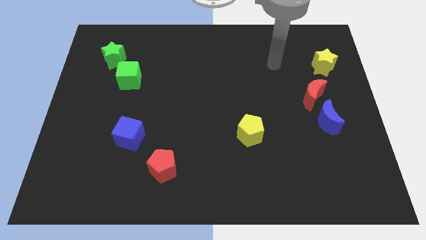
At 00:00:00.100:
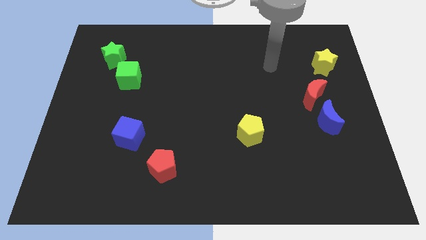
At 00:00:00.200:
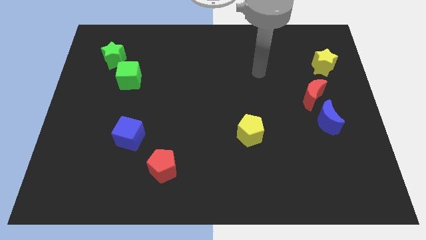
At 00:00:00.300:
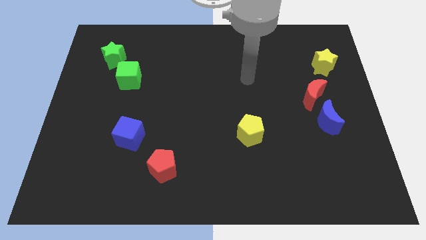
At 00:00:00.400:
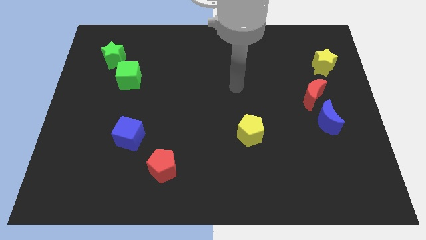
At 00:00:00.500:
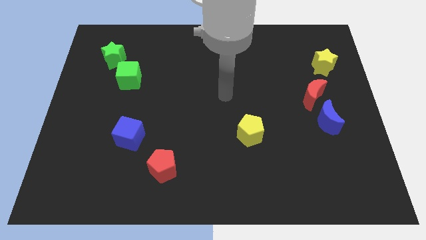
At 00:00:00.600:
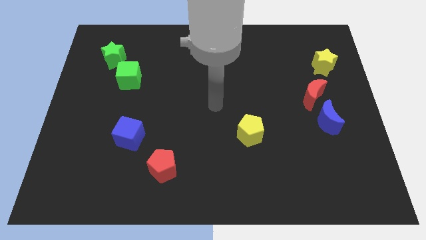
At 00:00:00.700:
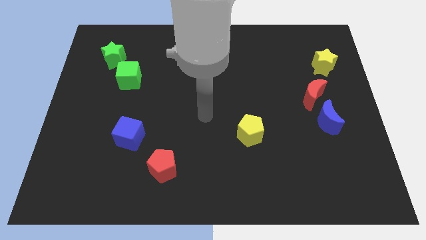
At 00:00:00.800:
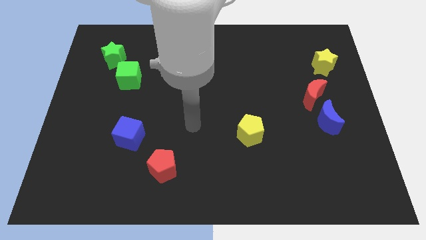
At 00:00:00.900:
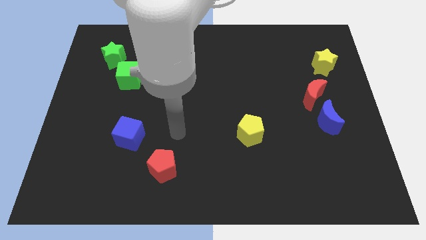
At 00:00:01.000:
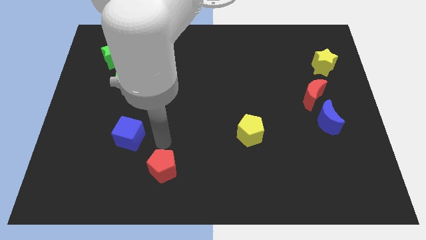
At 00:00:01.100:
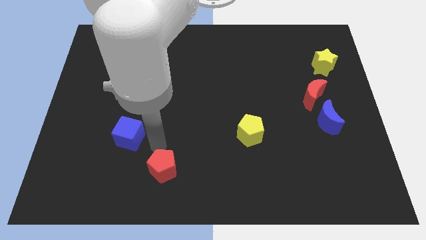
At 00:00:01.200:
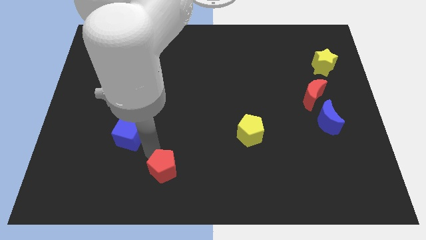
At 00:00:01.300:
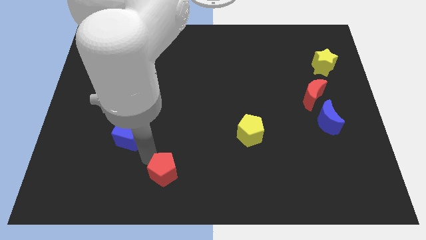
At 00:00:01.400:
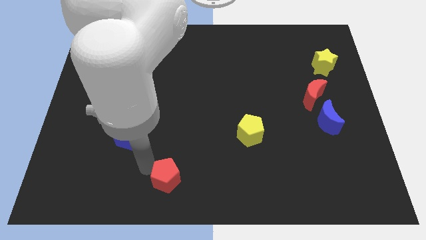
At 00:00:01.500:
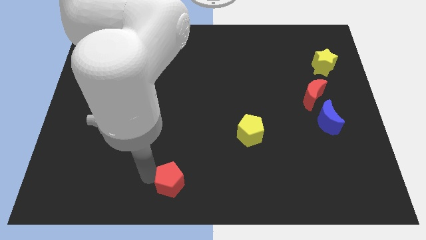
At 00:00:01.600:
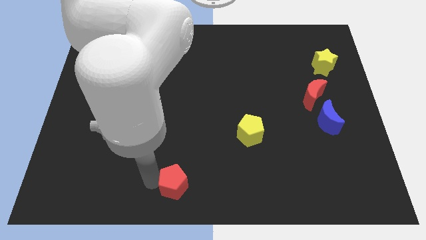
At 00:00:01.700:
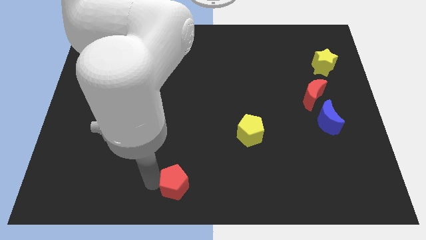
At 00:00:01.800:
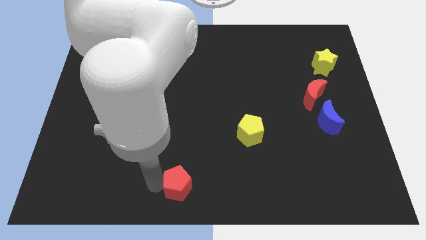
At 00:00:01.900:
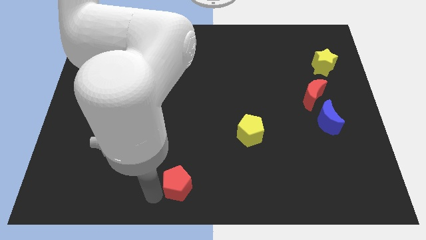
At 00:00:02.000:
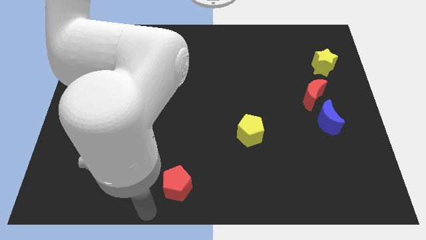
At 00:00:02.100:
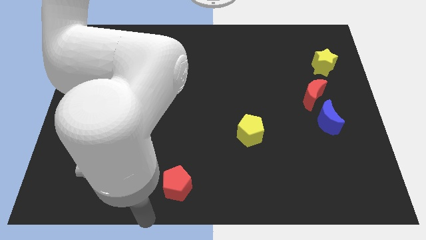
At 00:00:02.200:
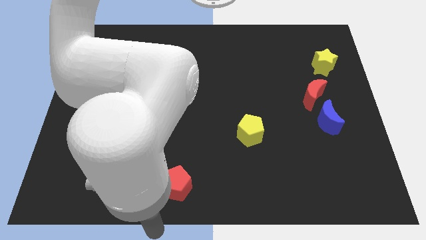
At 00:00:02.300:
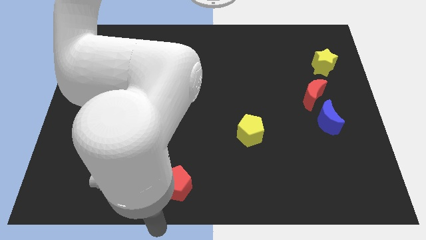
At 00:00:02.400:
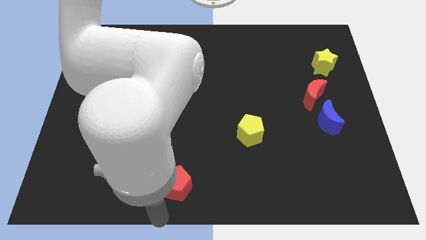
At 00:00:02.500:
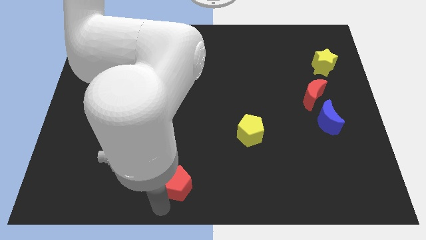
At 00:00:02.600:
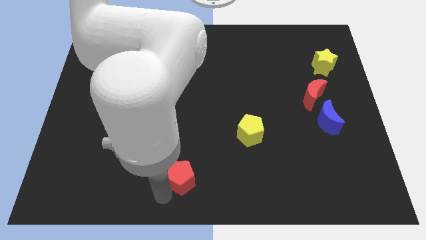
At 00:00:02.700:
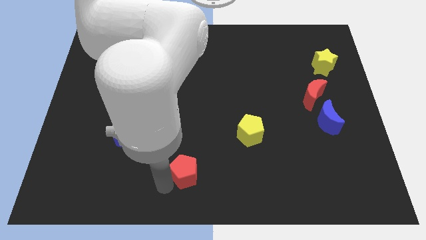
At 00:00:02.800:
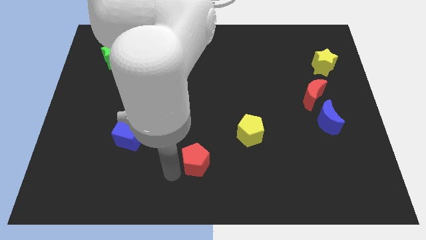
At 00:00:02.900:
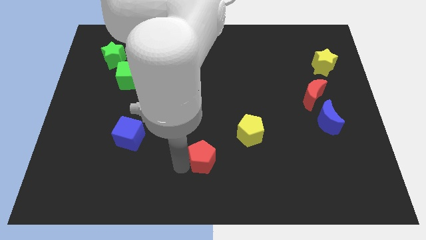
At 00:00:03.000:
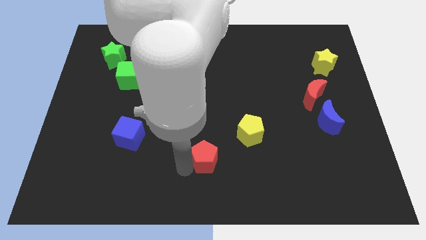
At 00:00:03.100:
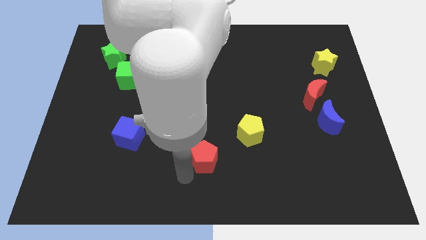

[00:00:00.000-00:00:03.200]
push the red pentagon close to the yellow pentagon

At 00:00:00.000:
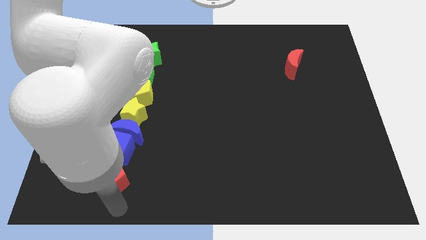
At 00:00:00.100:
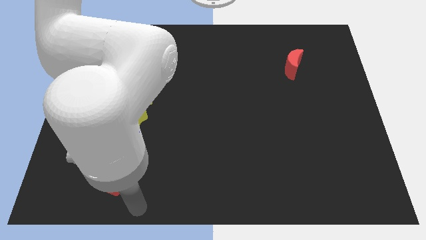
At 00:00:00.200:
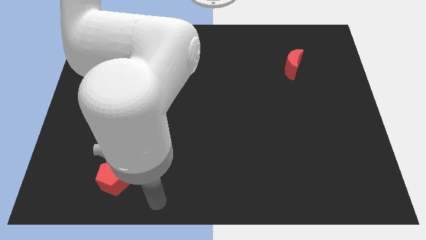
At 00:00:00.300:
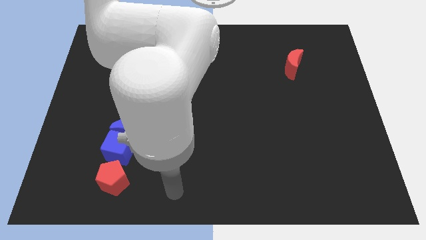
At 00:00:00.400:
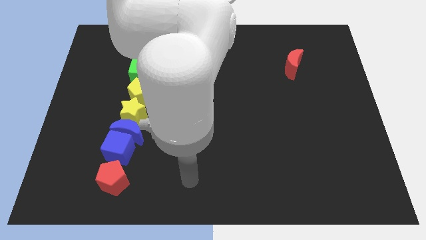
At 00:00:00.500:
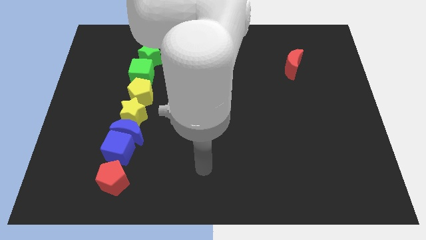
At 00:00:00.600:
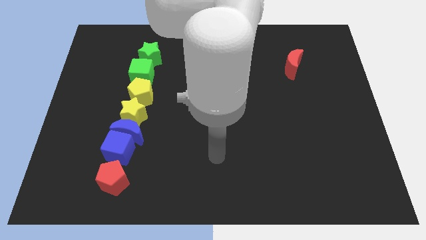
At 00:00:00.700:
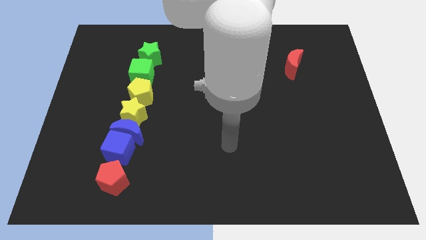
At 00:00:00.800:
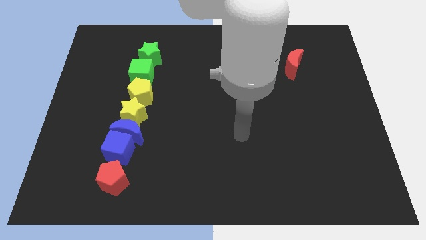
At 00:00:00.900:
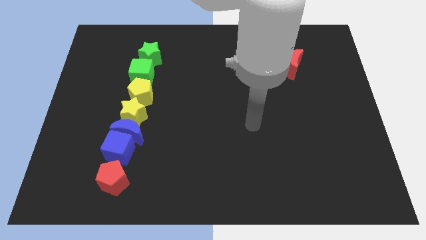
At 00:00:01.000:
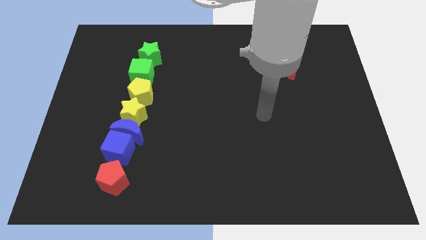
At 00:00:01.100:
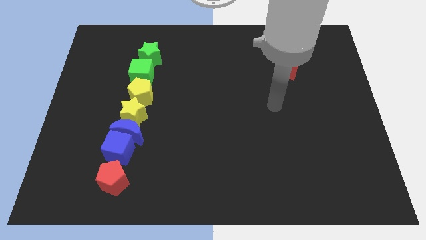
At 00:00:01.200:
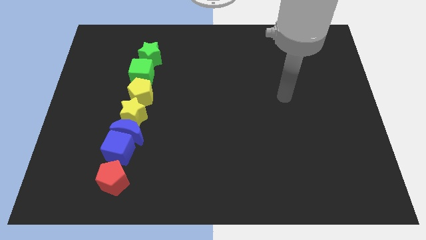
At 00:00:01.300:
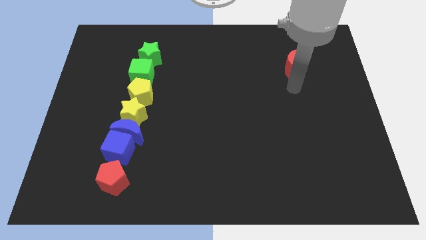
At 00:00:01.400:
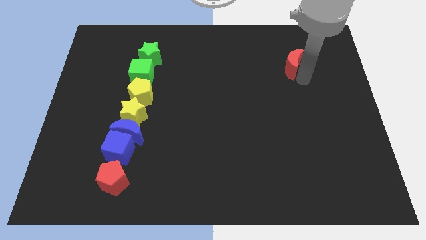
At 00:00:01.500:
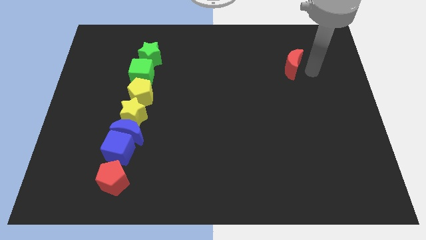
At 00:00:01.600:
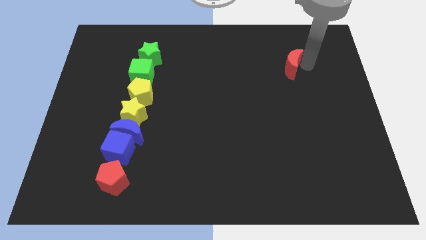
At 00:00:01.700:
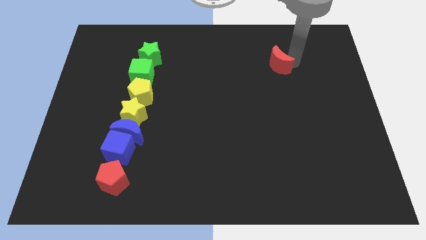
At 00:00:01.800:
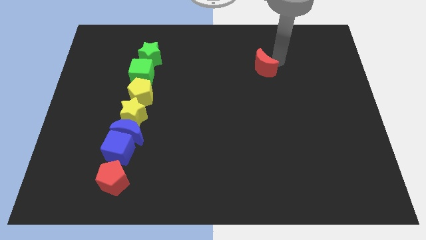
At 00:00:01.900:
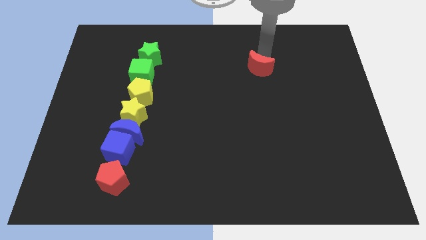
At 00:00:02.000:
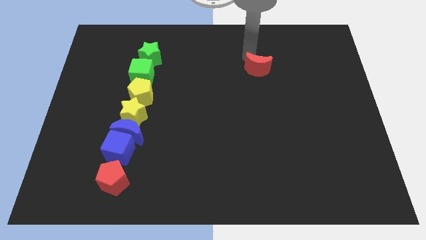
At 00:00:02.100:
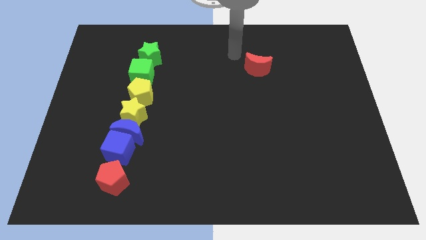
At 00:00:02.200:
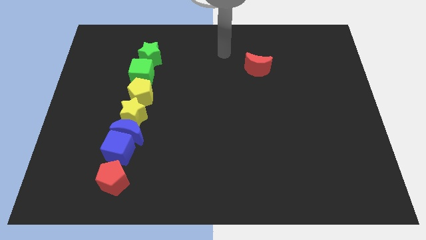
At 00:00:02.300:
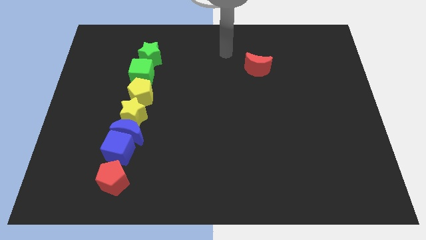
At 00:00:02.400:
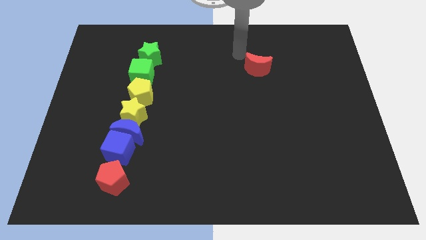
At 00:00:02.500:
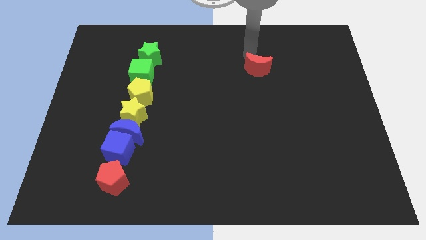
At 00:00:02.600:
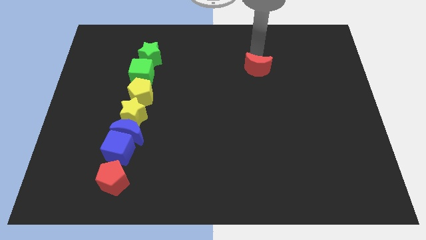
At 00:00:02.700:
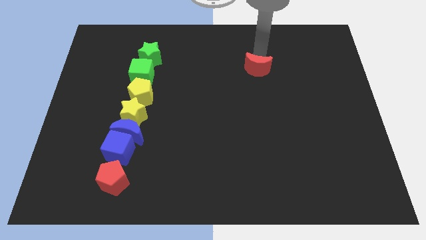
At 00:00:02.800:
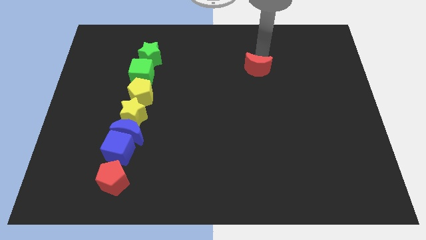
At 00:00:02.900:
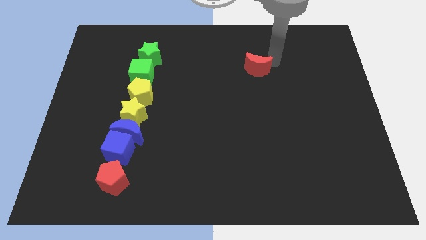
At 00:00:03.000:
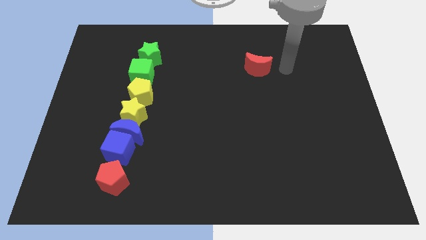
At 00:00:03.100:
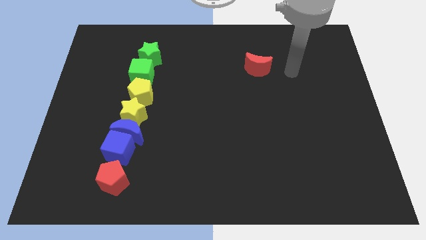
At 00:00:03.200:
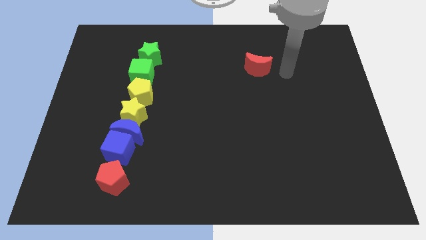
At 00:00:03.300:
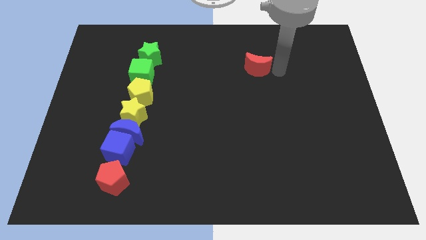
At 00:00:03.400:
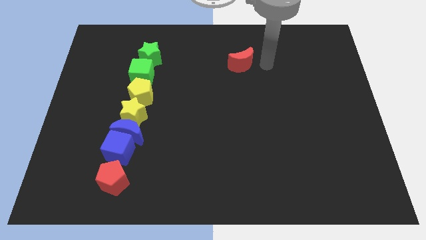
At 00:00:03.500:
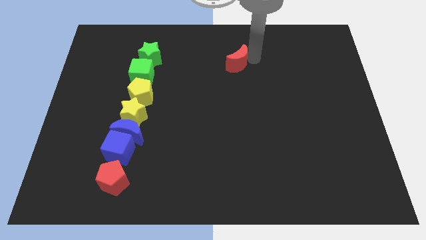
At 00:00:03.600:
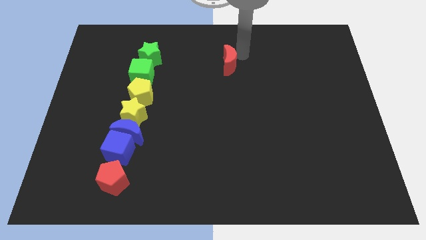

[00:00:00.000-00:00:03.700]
move the red moon to the left side of the board

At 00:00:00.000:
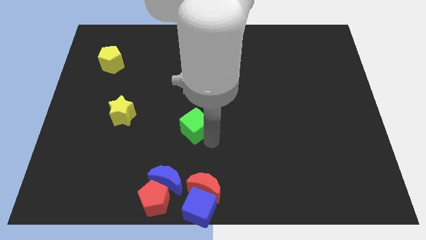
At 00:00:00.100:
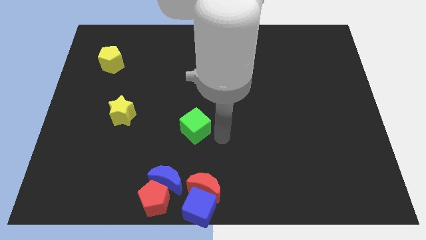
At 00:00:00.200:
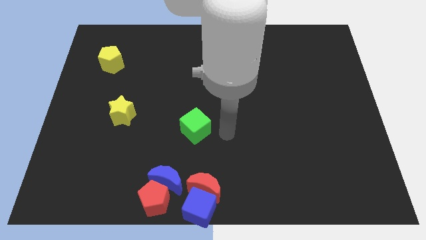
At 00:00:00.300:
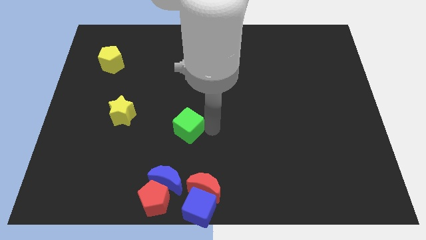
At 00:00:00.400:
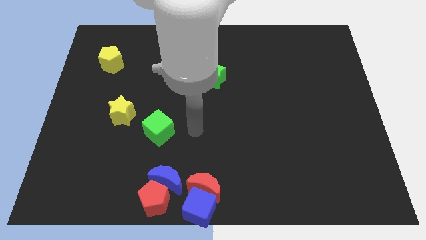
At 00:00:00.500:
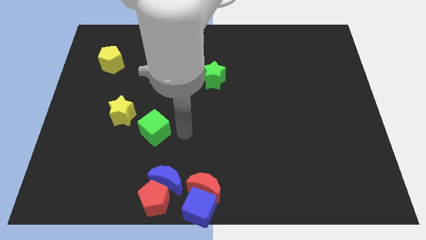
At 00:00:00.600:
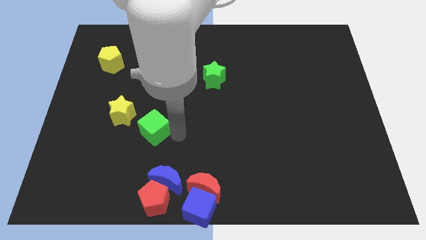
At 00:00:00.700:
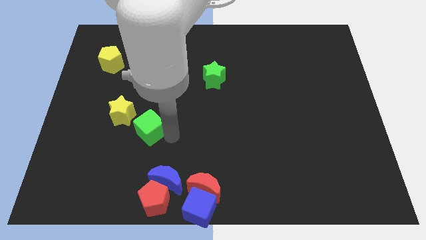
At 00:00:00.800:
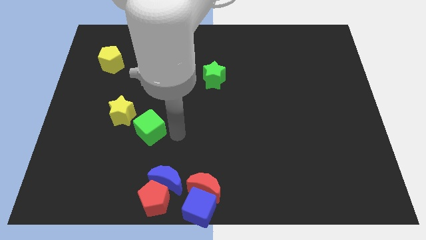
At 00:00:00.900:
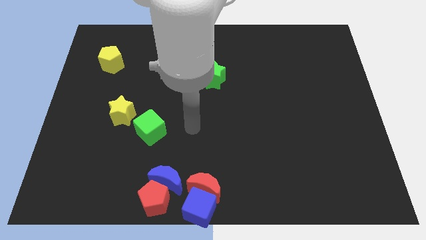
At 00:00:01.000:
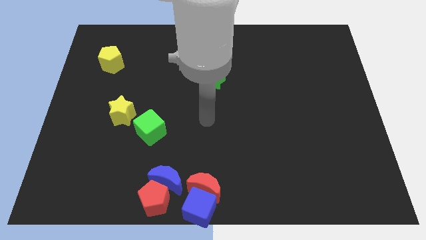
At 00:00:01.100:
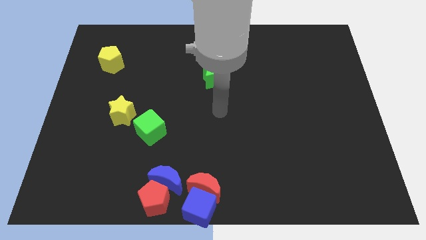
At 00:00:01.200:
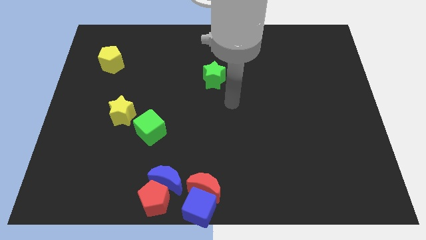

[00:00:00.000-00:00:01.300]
push the green cube diagonally right of the yellow star

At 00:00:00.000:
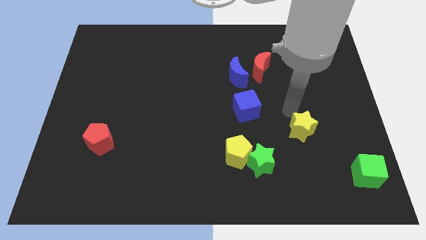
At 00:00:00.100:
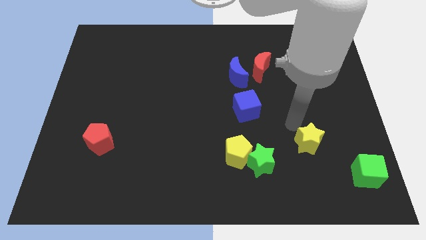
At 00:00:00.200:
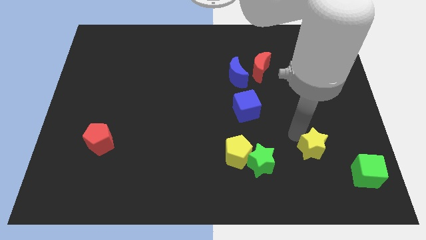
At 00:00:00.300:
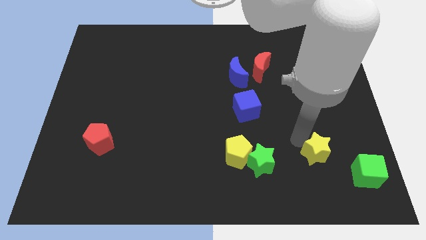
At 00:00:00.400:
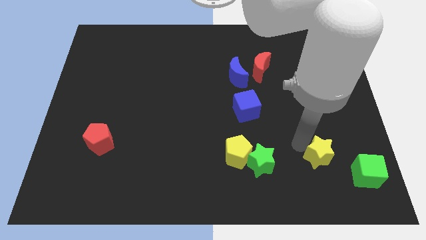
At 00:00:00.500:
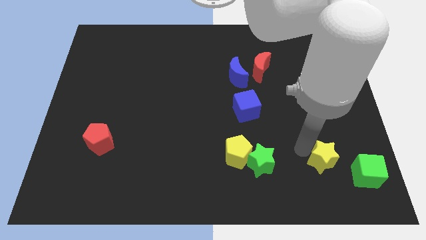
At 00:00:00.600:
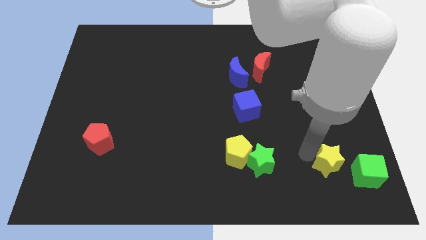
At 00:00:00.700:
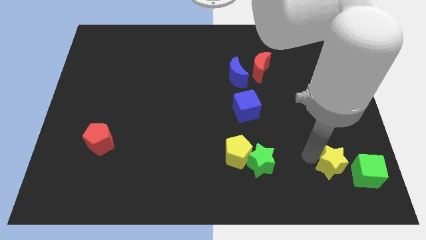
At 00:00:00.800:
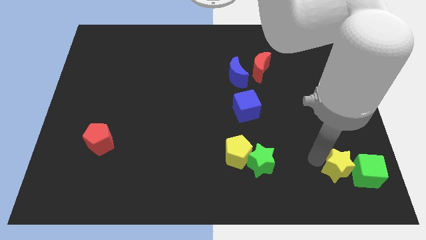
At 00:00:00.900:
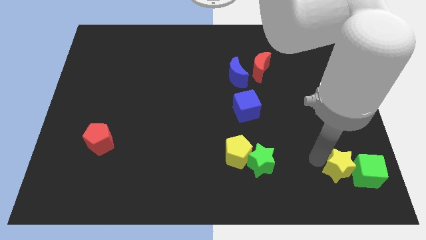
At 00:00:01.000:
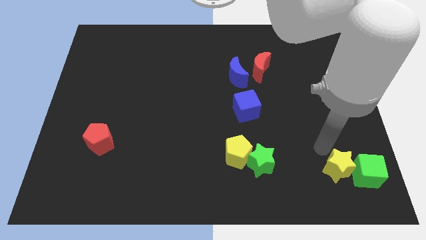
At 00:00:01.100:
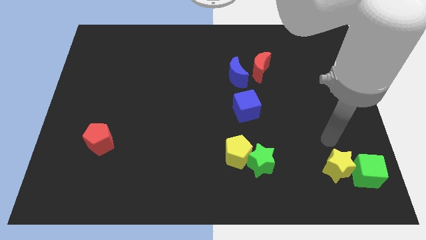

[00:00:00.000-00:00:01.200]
put the yellow star to the left side of green cube
